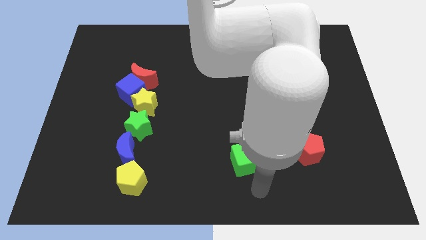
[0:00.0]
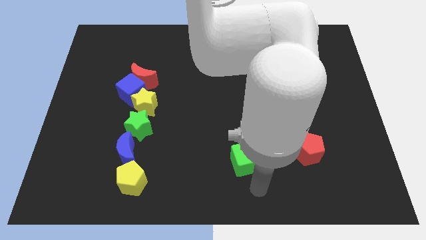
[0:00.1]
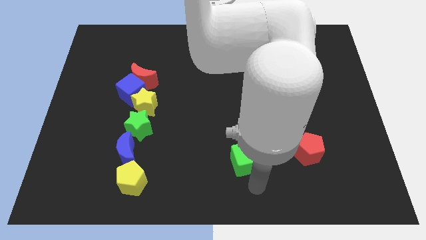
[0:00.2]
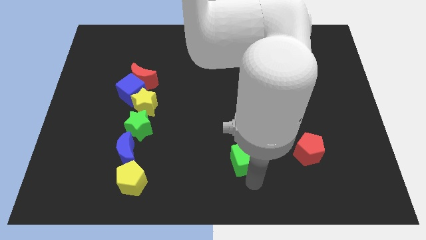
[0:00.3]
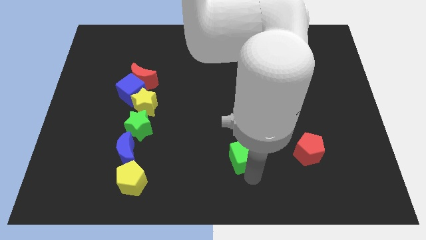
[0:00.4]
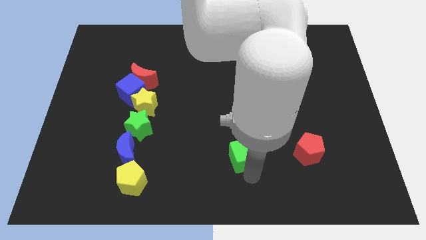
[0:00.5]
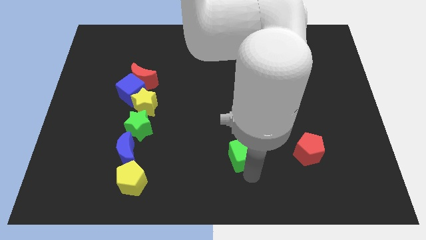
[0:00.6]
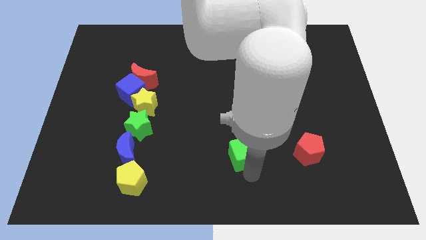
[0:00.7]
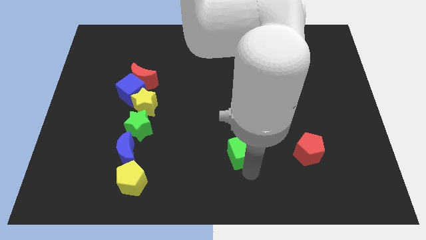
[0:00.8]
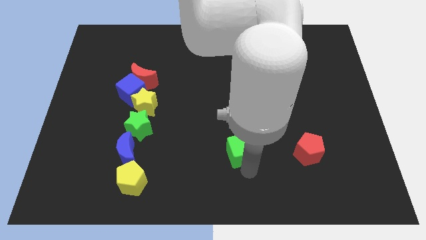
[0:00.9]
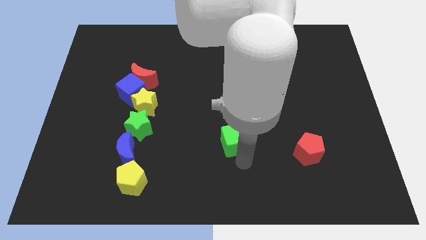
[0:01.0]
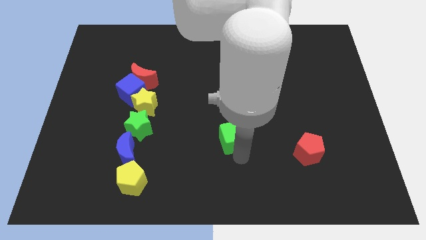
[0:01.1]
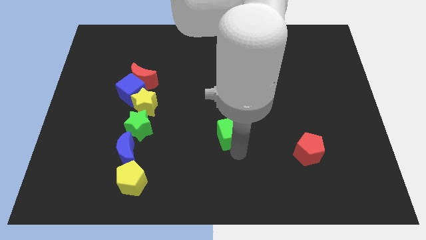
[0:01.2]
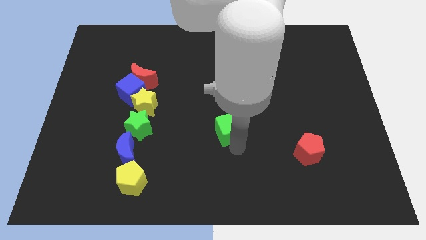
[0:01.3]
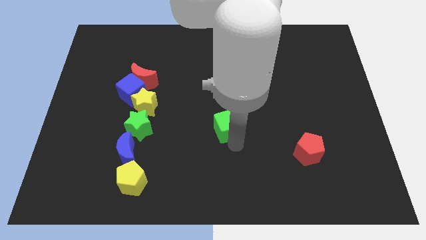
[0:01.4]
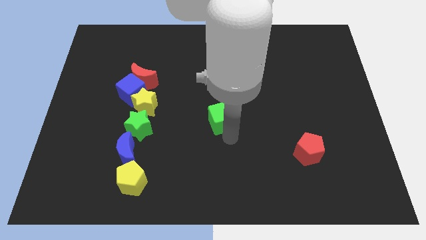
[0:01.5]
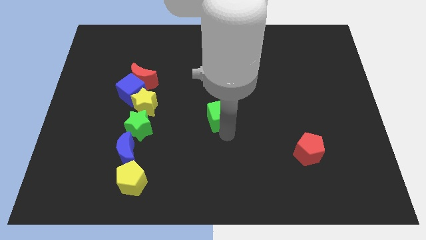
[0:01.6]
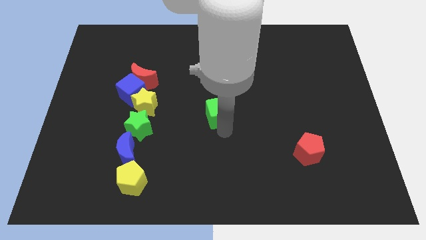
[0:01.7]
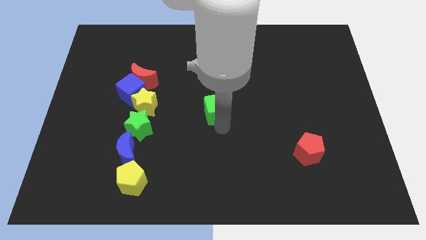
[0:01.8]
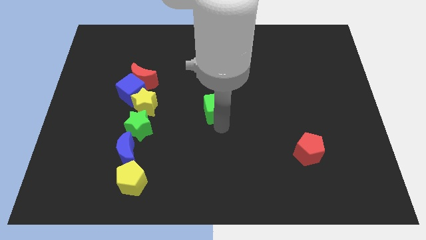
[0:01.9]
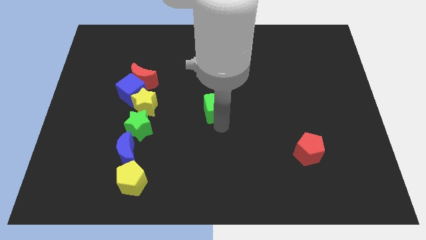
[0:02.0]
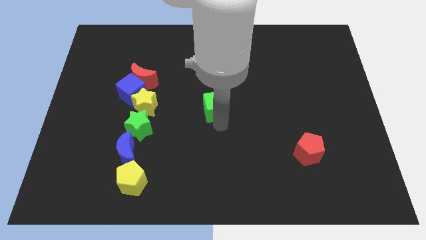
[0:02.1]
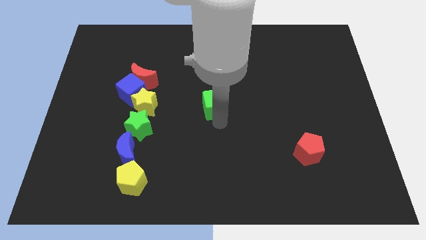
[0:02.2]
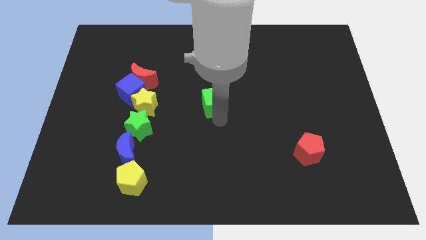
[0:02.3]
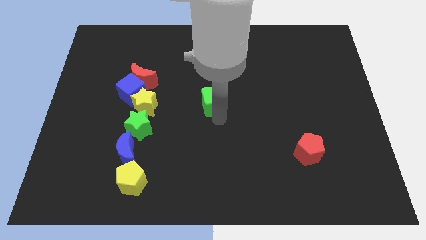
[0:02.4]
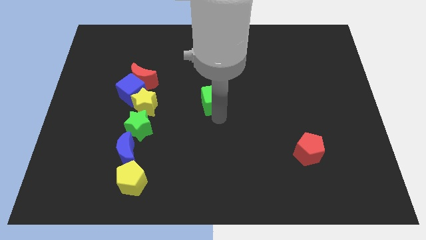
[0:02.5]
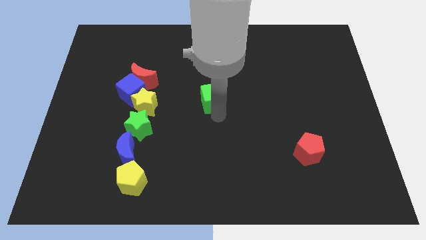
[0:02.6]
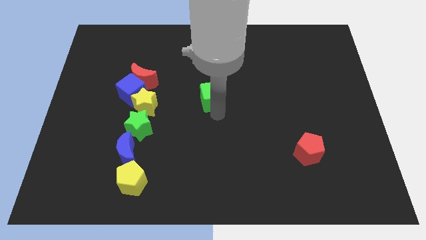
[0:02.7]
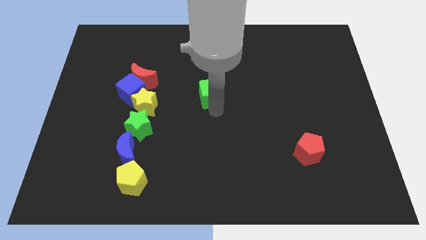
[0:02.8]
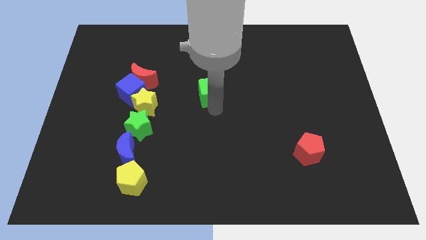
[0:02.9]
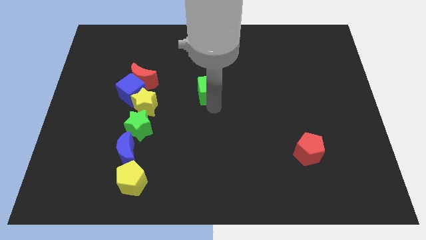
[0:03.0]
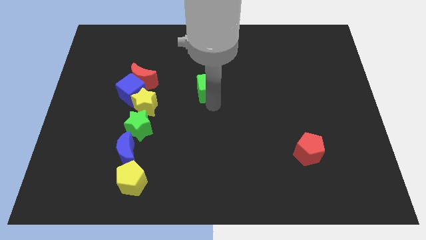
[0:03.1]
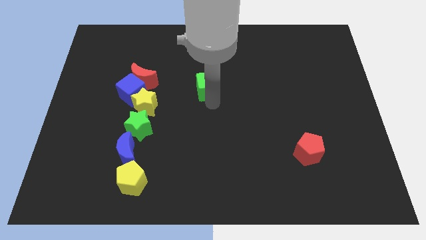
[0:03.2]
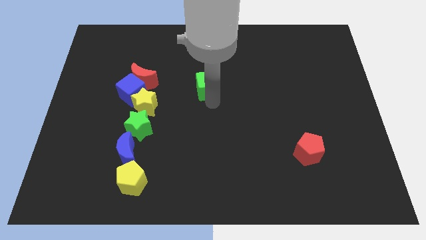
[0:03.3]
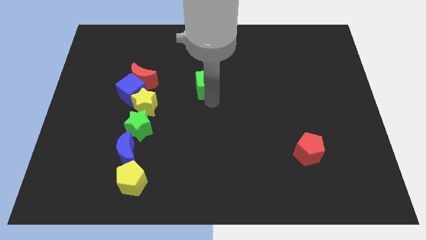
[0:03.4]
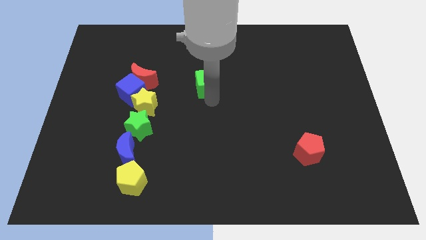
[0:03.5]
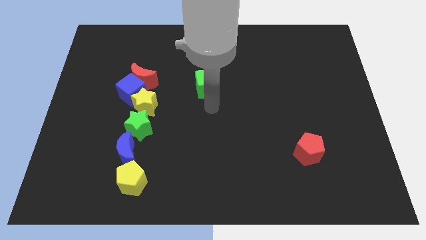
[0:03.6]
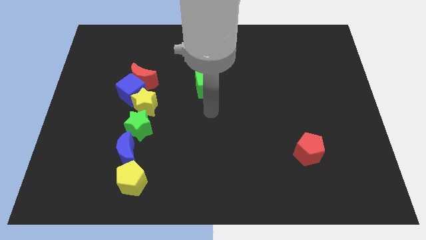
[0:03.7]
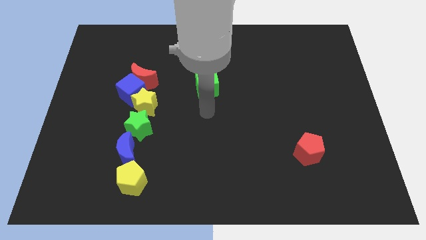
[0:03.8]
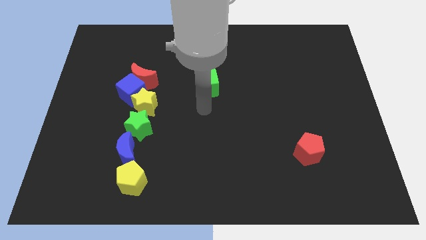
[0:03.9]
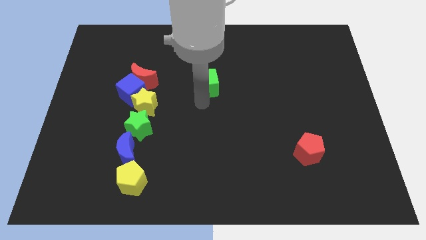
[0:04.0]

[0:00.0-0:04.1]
push the green cube slightly to the top of the board

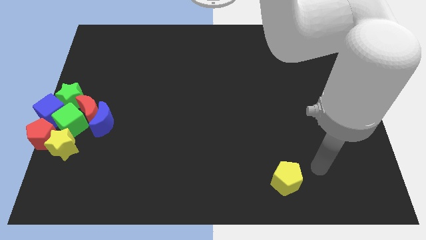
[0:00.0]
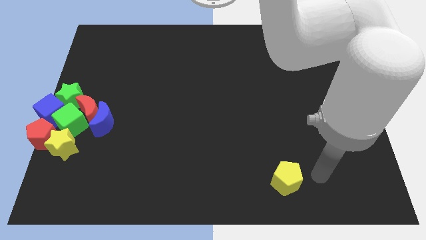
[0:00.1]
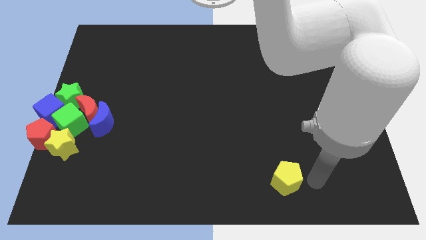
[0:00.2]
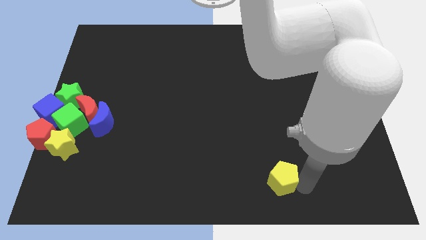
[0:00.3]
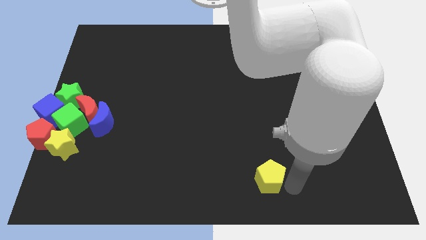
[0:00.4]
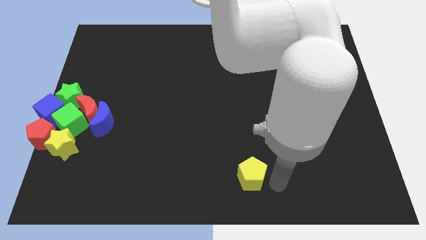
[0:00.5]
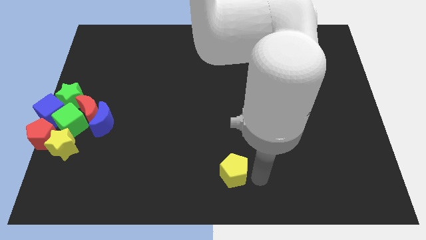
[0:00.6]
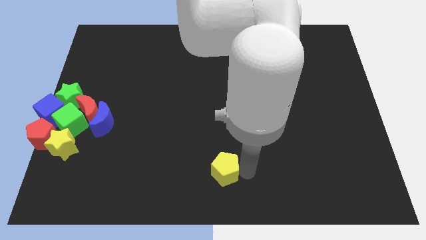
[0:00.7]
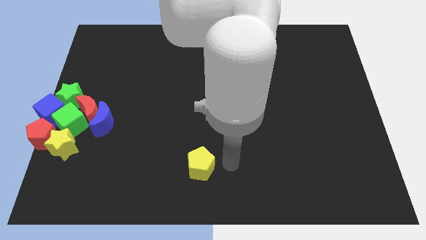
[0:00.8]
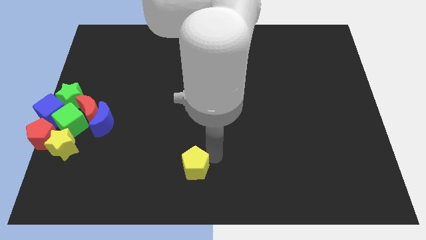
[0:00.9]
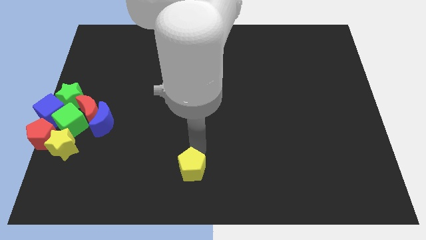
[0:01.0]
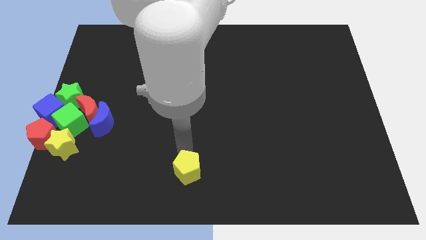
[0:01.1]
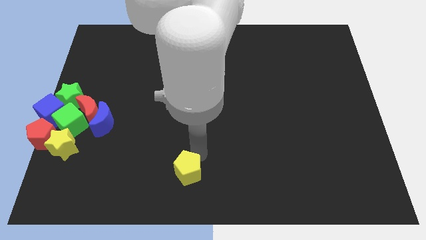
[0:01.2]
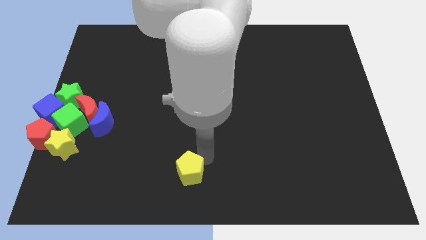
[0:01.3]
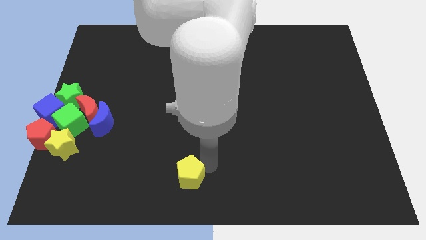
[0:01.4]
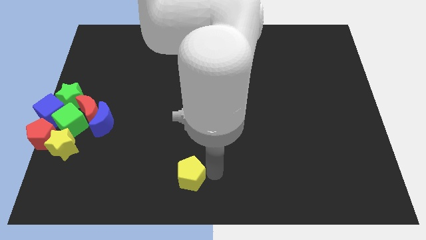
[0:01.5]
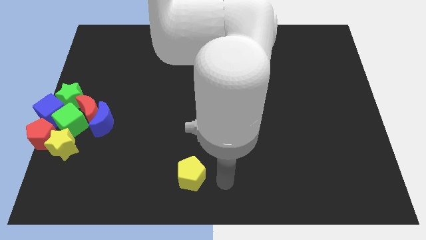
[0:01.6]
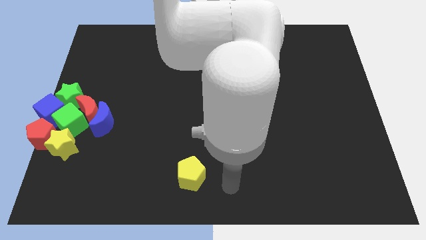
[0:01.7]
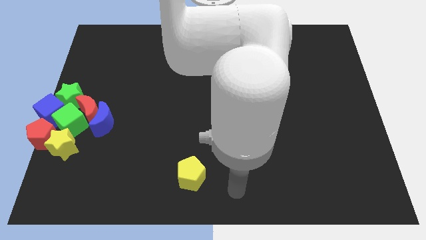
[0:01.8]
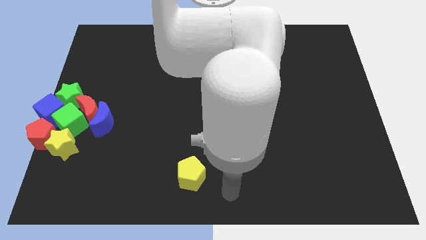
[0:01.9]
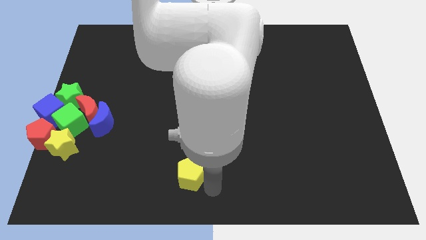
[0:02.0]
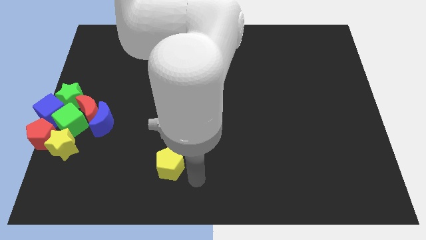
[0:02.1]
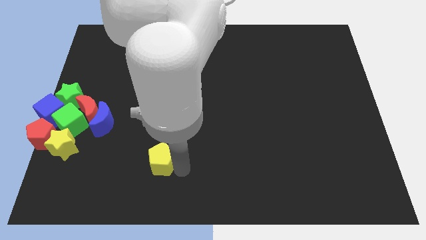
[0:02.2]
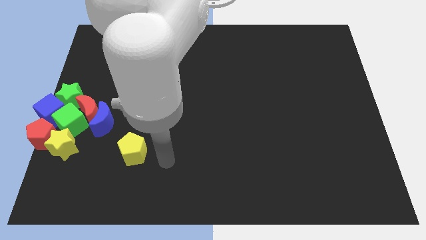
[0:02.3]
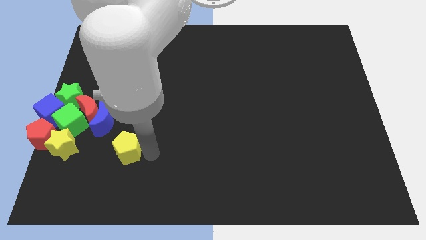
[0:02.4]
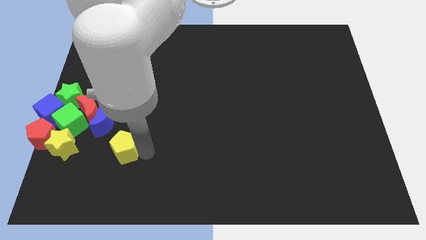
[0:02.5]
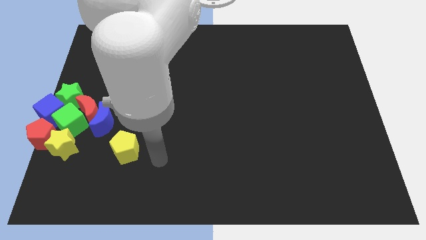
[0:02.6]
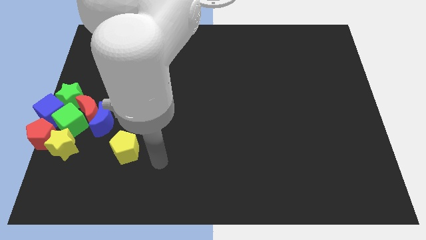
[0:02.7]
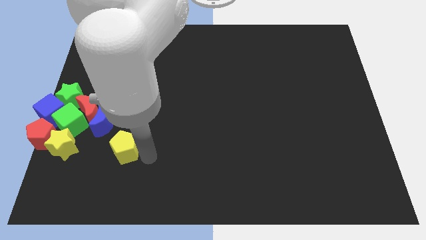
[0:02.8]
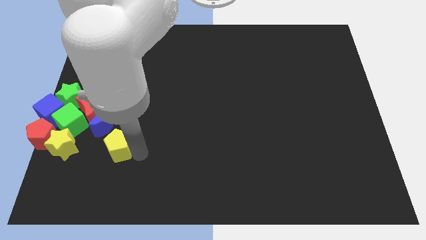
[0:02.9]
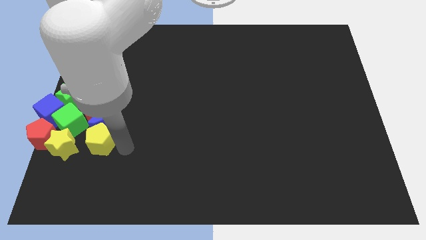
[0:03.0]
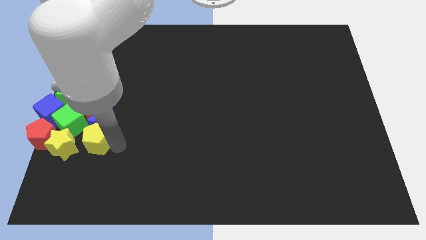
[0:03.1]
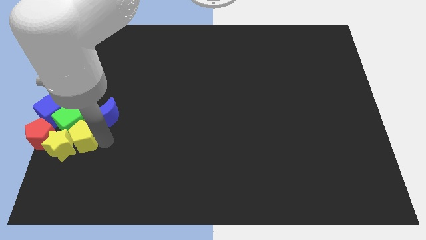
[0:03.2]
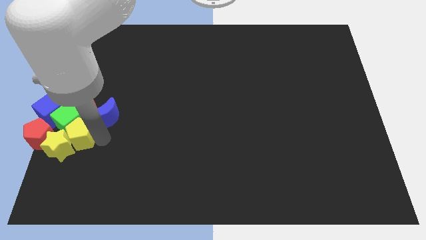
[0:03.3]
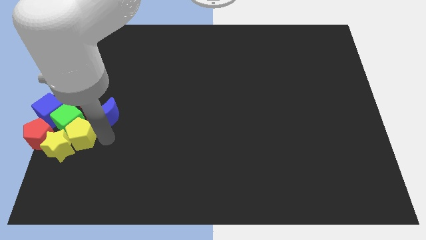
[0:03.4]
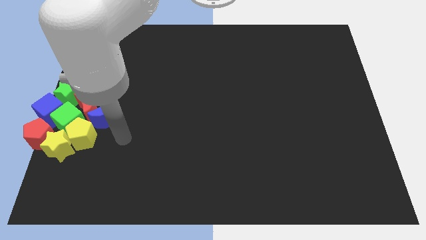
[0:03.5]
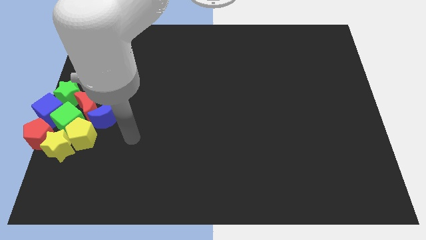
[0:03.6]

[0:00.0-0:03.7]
slide yellow pentagon into the group of blocks

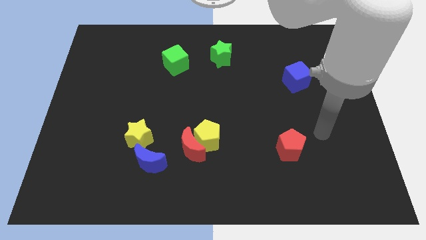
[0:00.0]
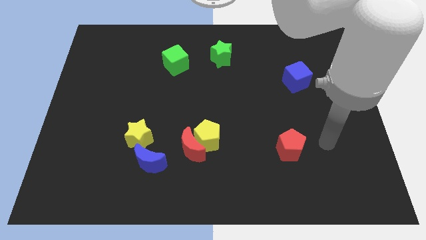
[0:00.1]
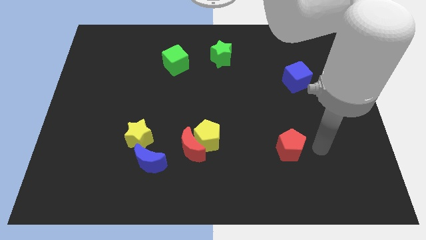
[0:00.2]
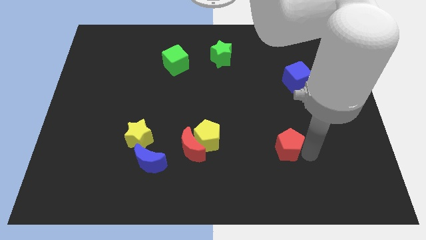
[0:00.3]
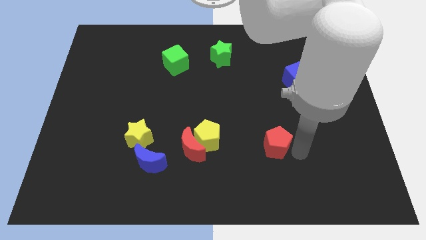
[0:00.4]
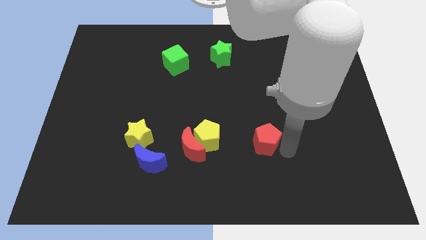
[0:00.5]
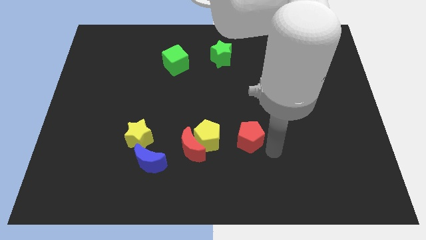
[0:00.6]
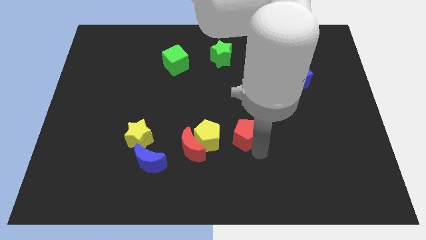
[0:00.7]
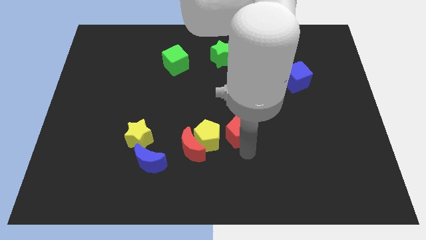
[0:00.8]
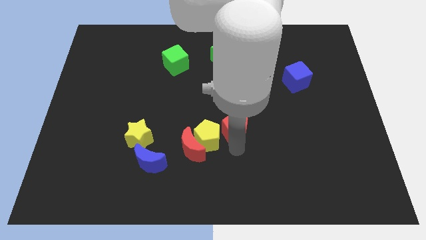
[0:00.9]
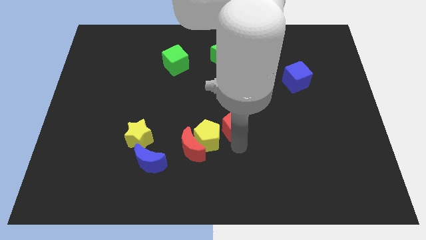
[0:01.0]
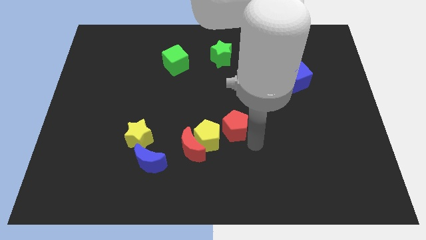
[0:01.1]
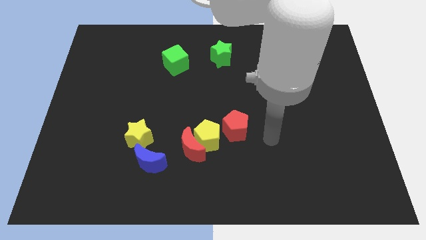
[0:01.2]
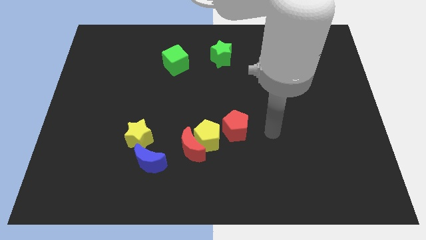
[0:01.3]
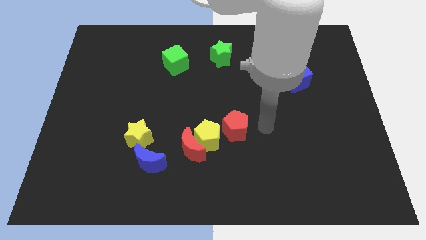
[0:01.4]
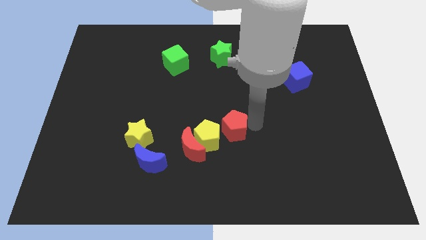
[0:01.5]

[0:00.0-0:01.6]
move the red pentagon to the right of the yellow pentagon
